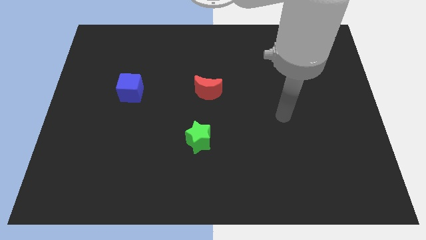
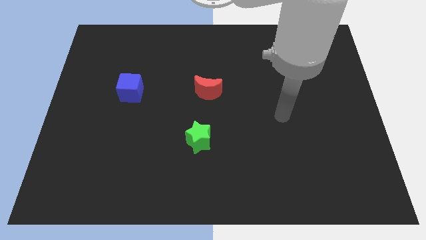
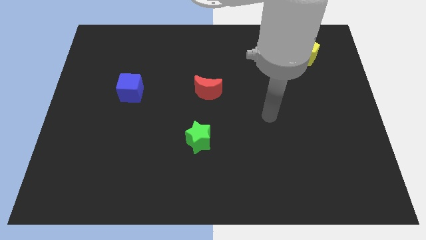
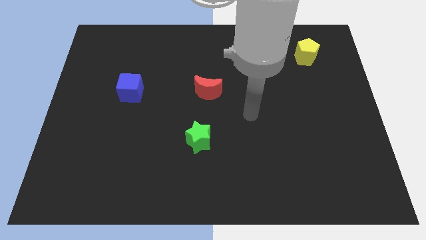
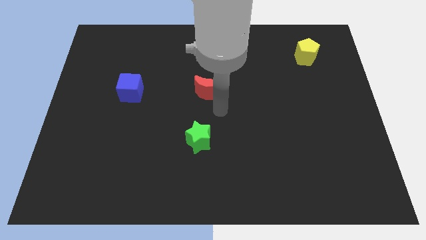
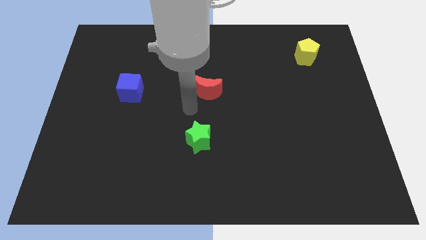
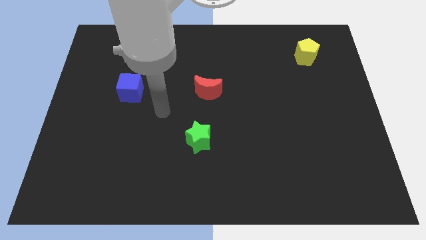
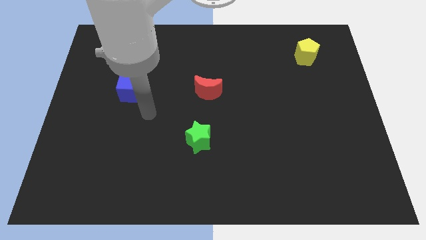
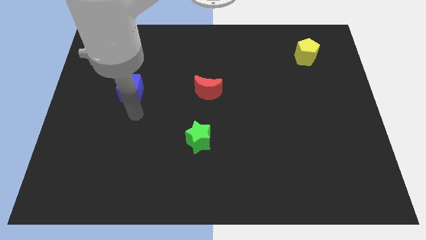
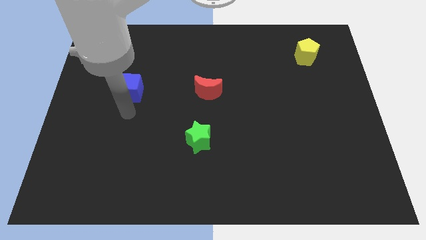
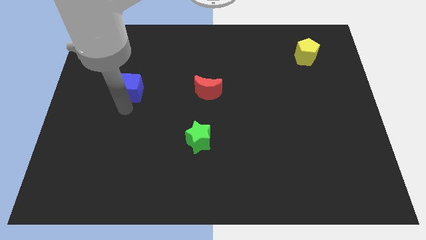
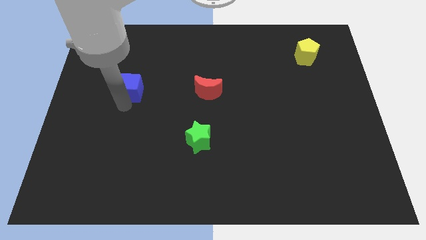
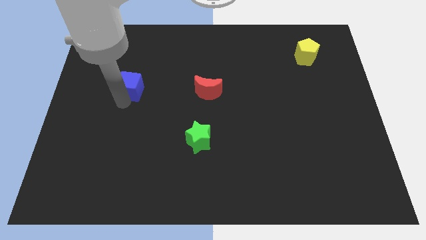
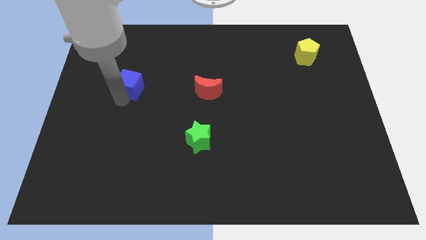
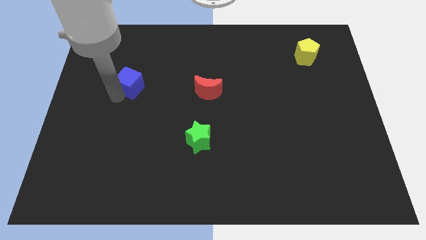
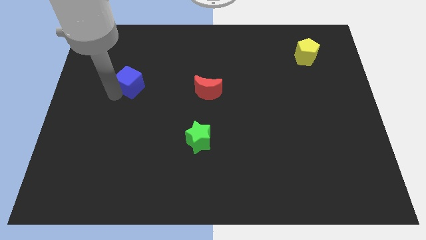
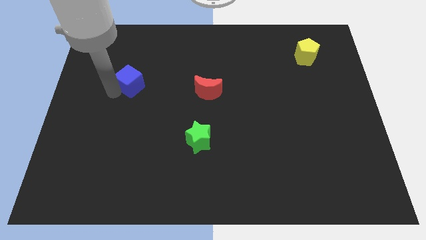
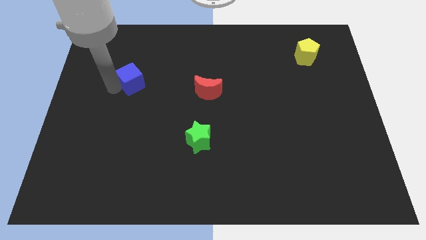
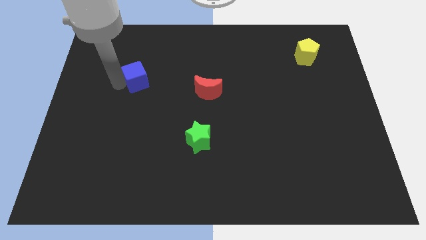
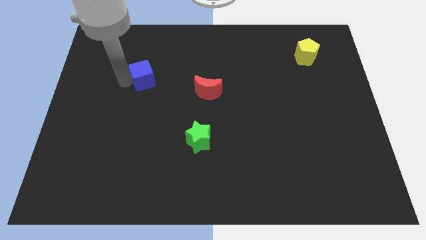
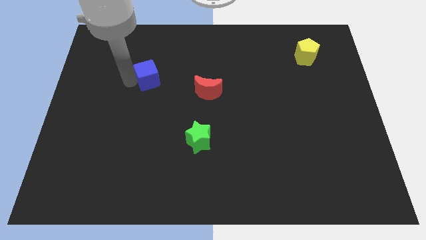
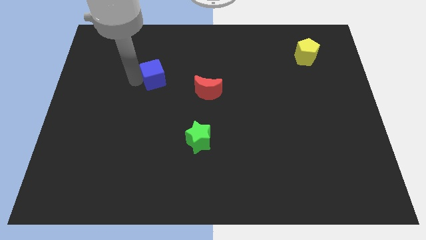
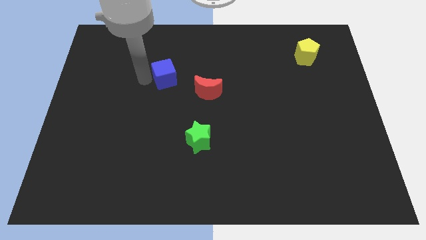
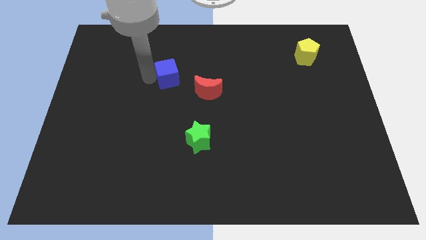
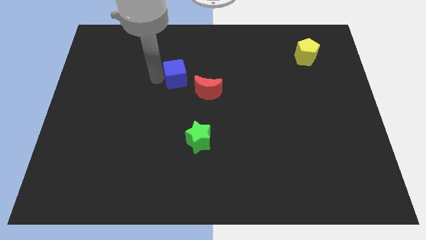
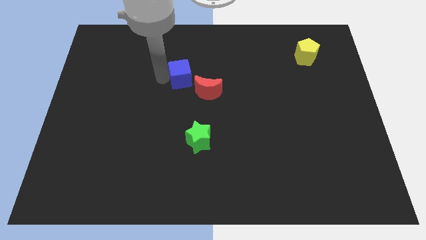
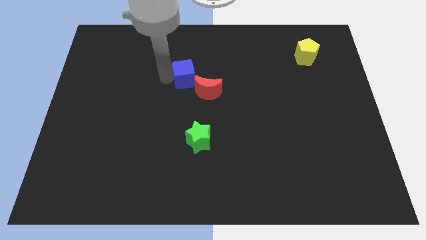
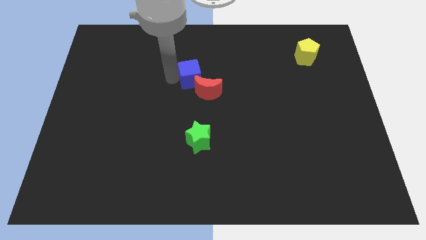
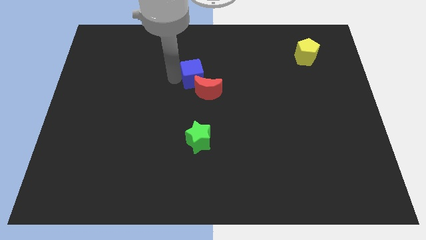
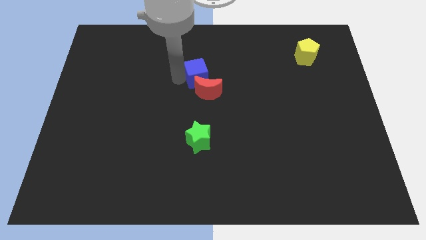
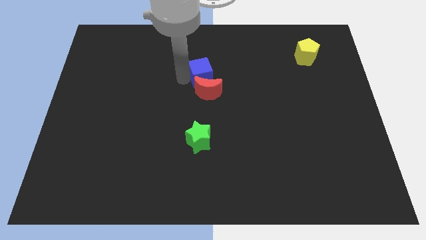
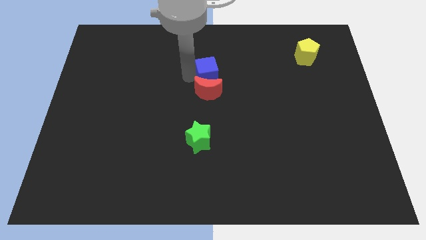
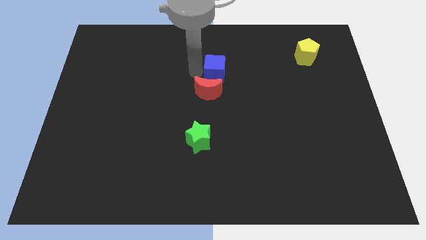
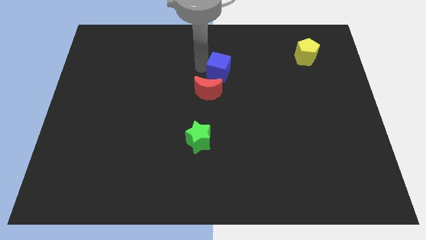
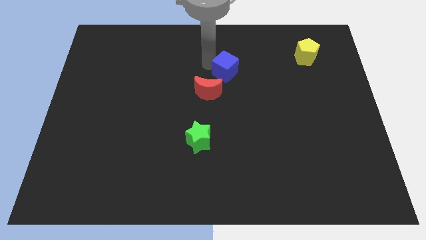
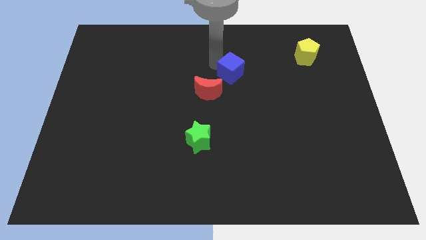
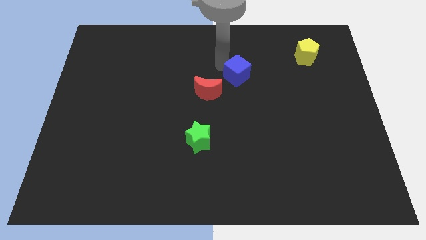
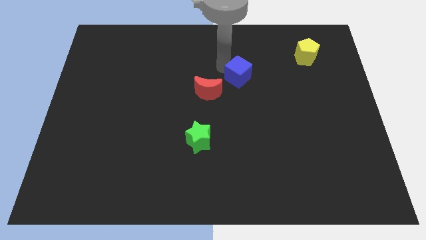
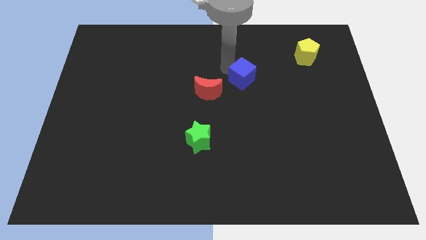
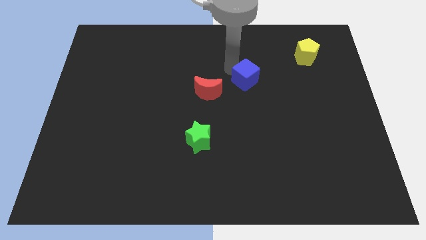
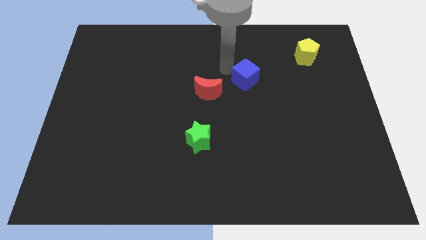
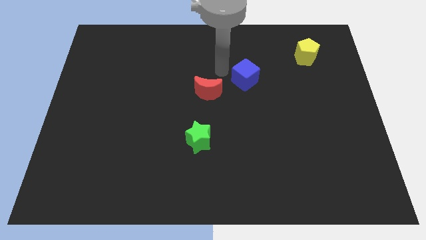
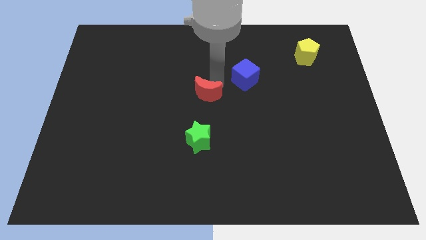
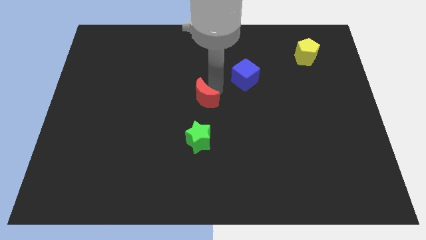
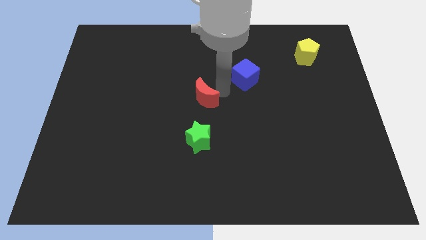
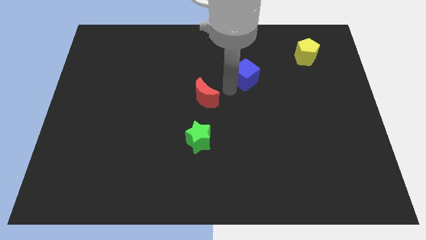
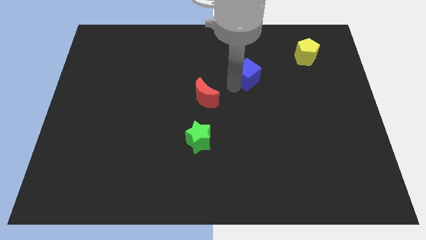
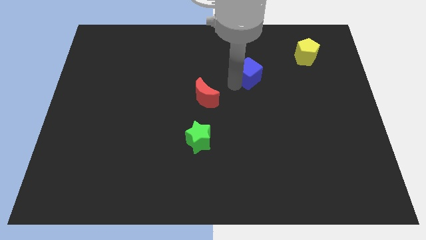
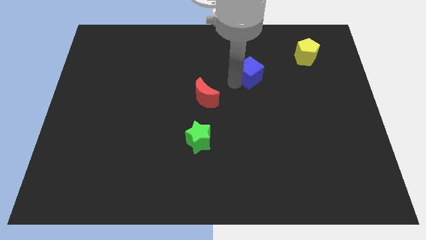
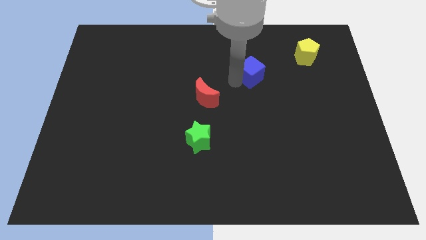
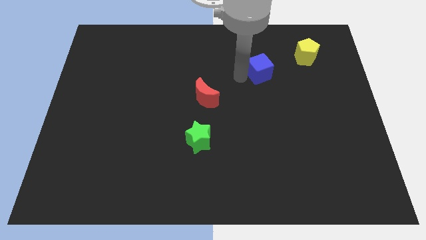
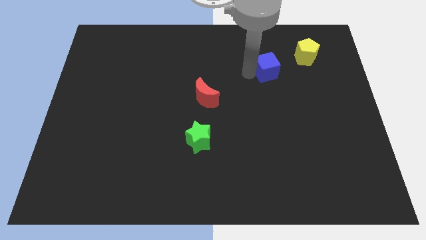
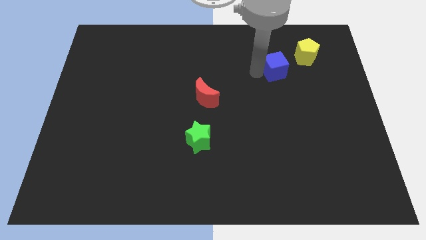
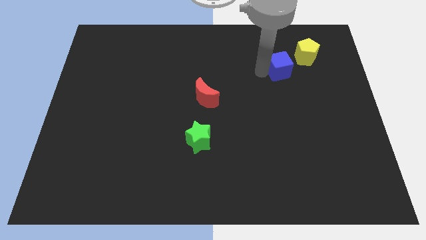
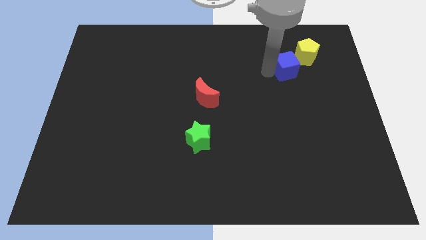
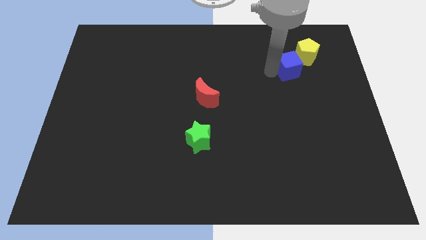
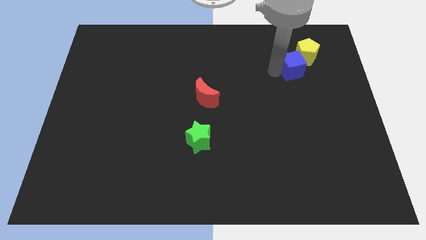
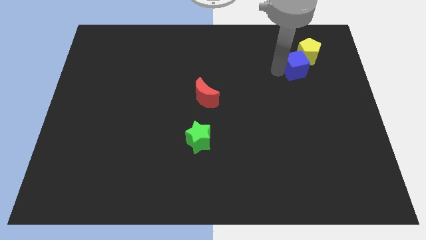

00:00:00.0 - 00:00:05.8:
put the cube to the yellow block

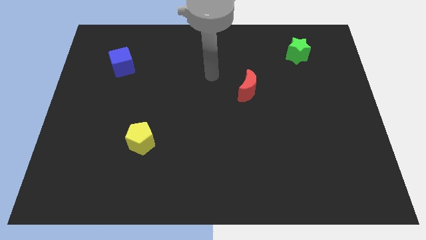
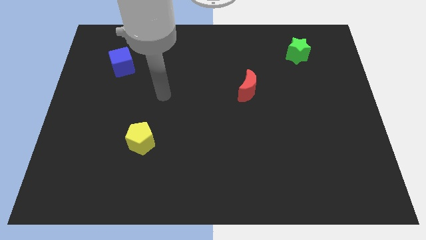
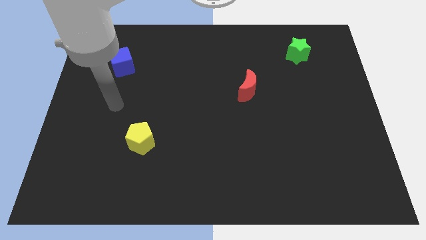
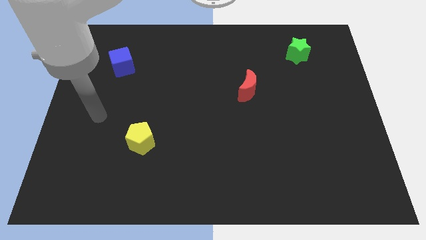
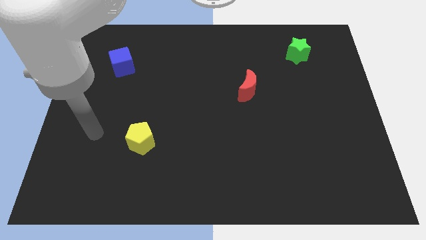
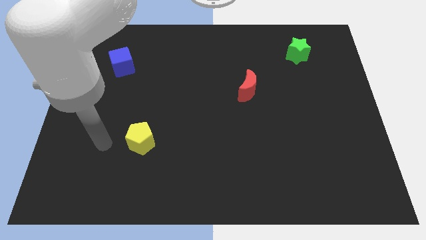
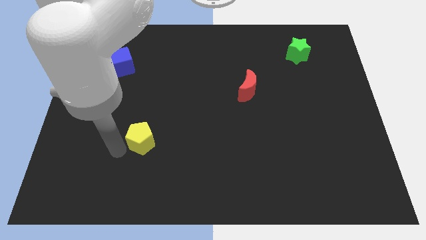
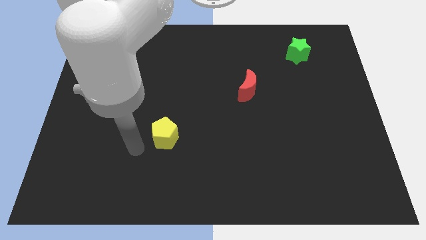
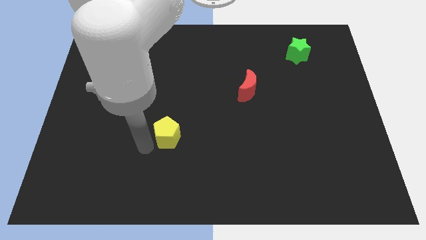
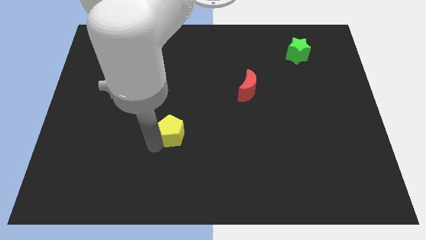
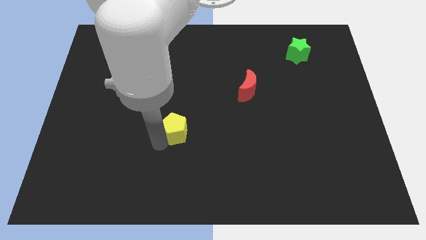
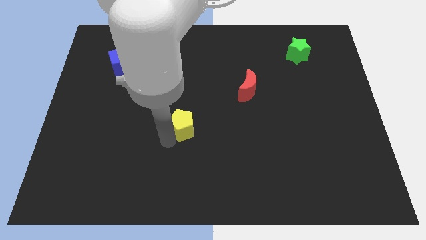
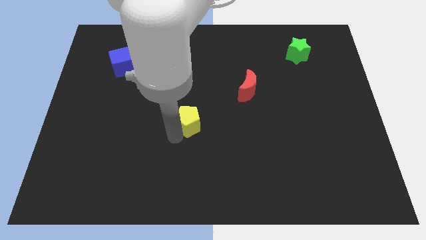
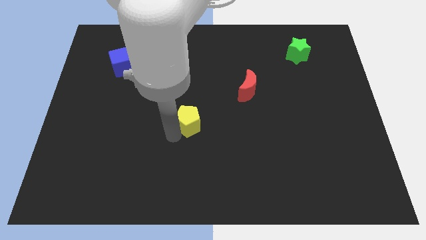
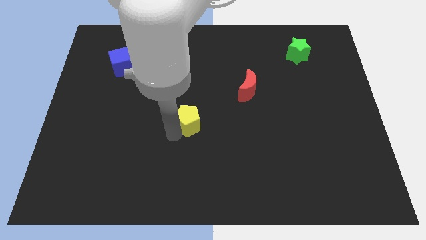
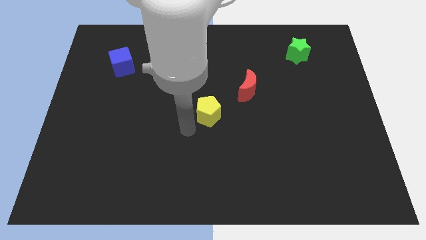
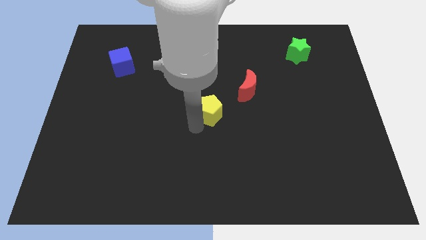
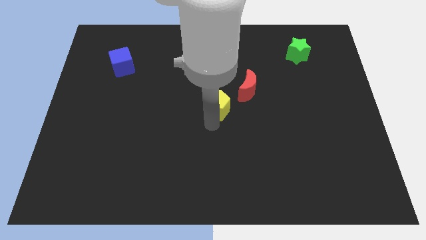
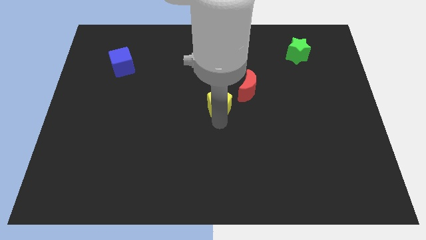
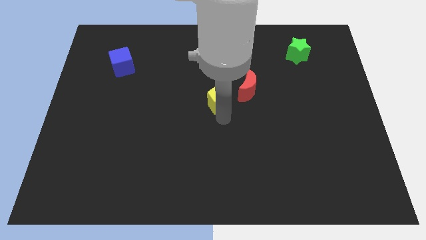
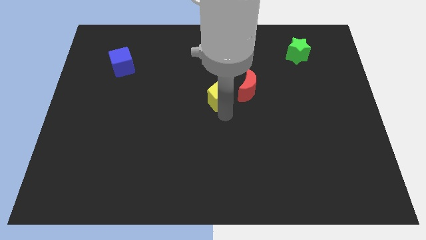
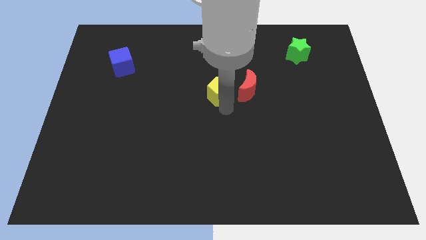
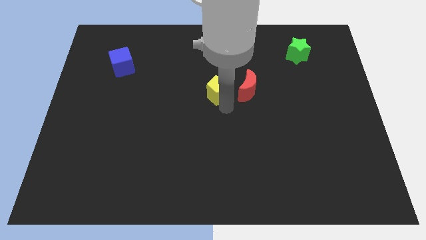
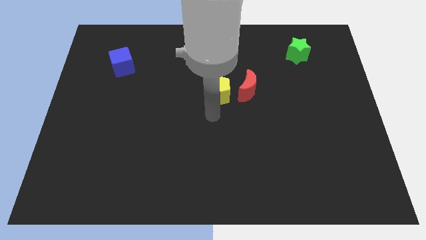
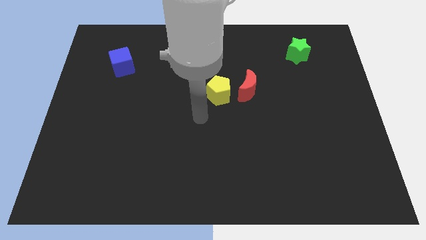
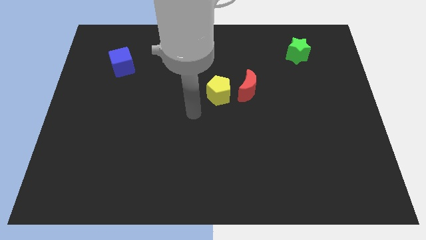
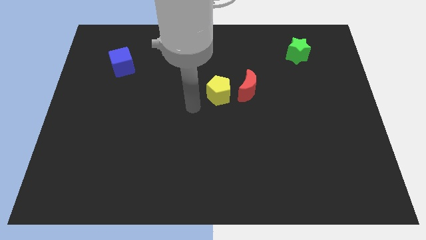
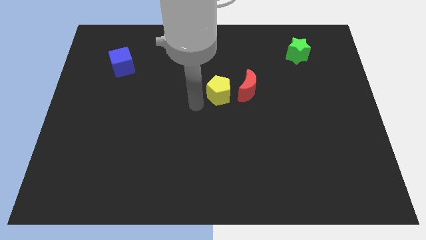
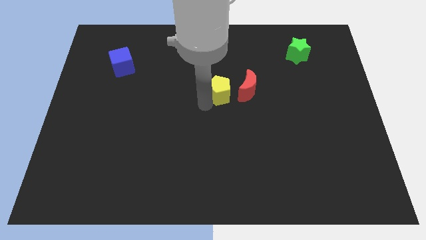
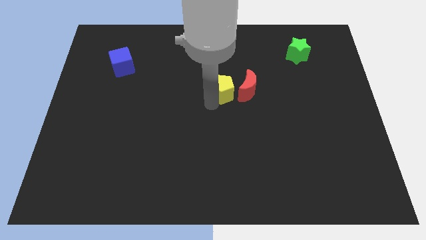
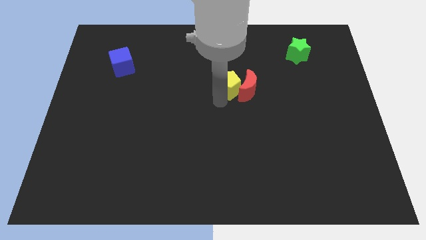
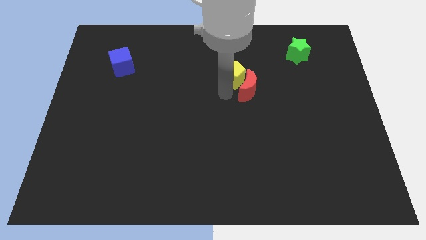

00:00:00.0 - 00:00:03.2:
move the yellow block close to the red moon
